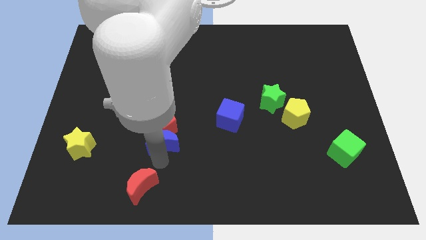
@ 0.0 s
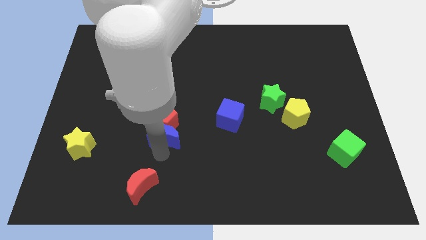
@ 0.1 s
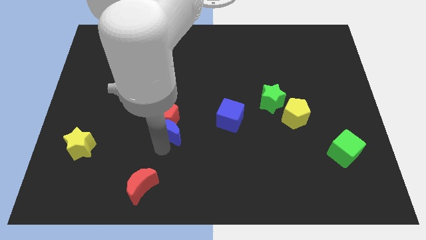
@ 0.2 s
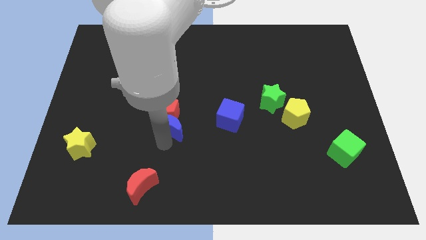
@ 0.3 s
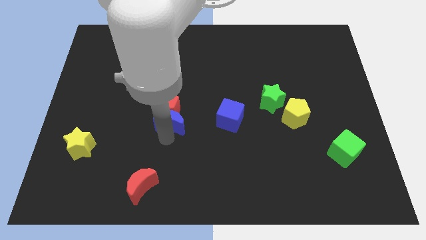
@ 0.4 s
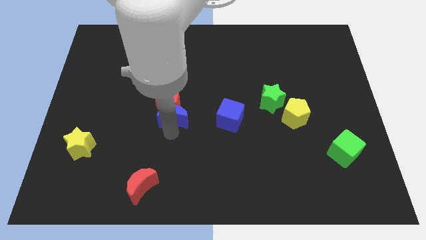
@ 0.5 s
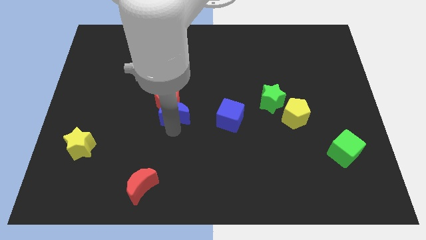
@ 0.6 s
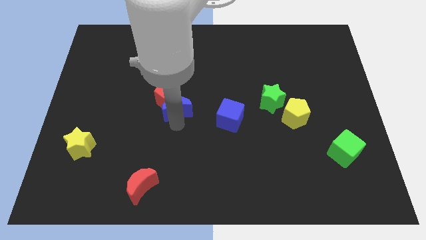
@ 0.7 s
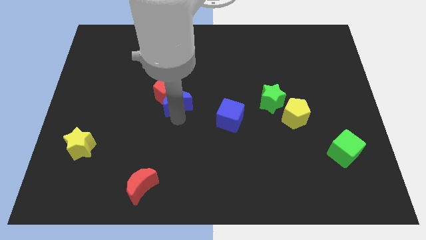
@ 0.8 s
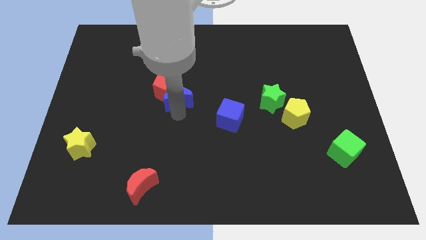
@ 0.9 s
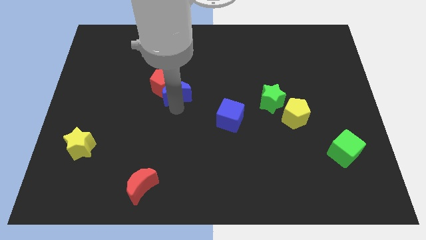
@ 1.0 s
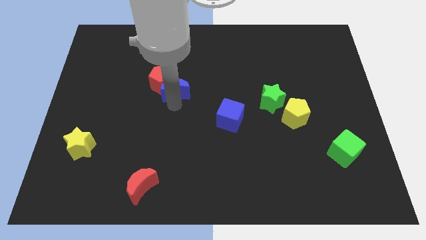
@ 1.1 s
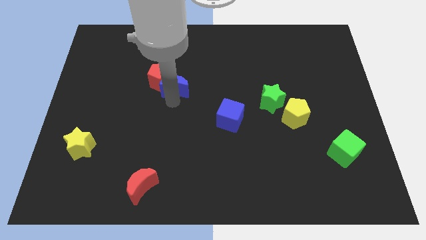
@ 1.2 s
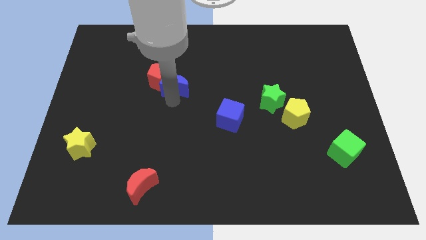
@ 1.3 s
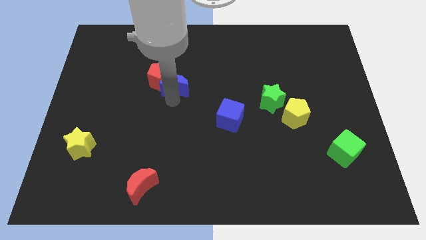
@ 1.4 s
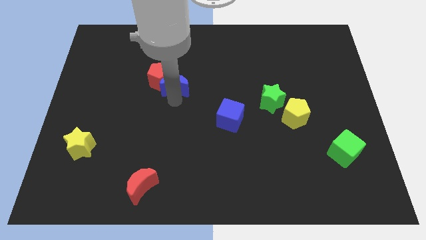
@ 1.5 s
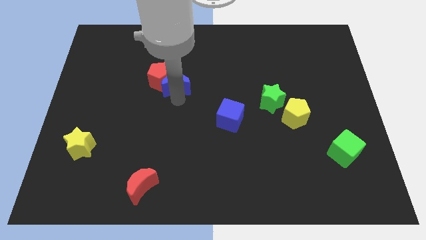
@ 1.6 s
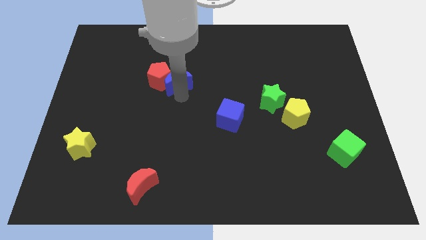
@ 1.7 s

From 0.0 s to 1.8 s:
push the red pentagon and blue moon slightly up

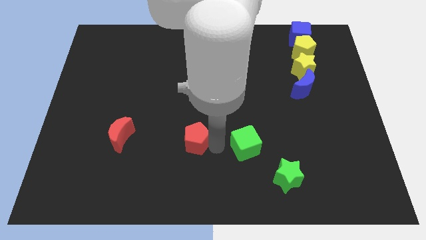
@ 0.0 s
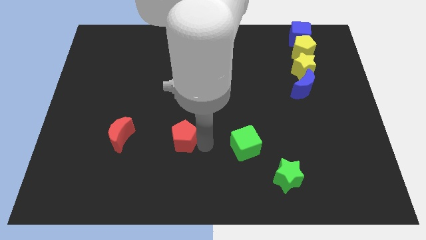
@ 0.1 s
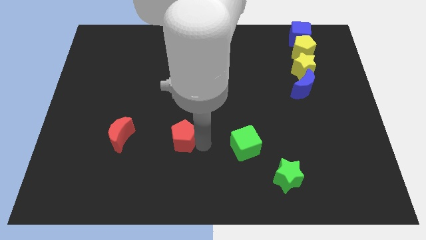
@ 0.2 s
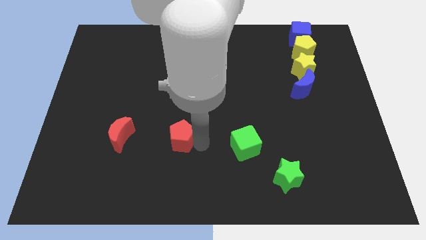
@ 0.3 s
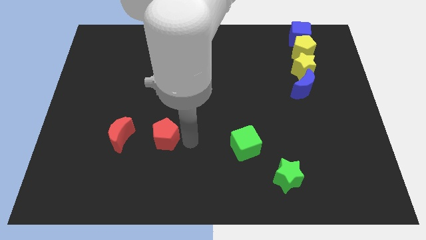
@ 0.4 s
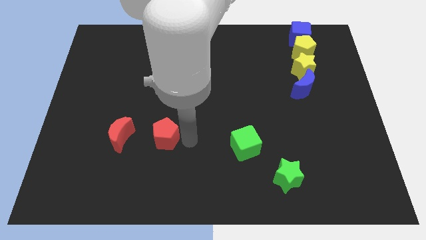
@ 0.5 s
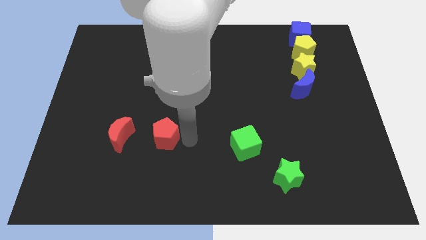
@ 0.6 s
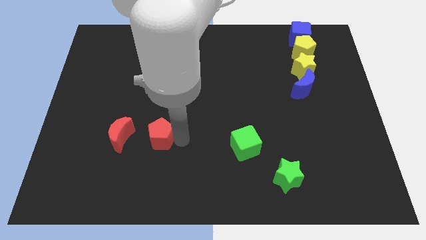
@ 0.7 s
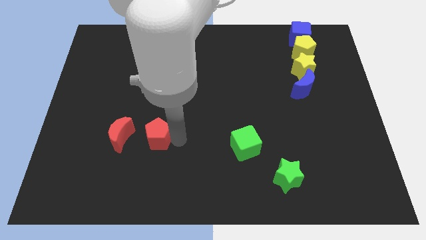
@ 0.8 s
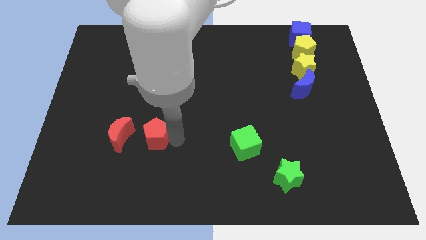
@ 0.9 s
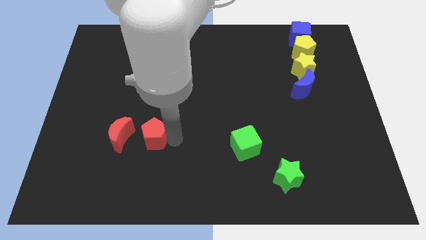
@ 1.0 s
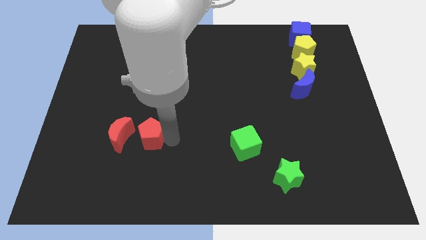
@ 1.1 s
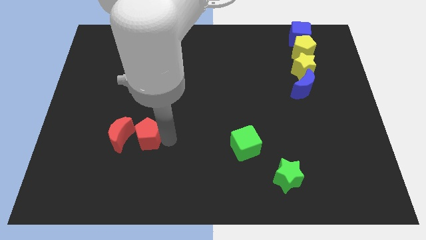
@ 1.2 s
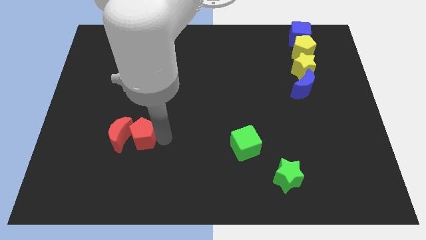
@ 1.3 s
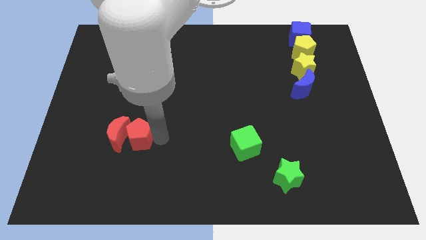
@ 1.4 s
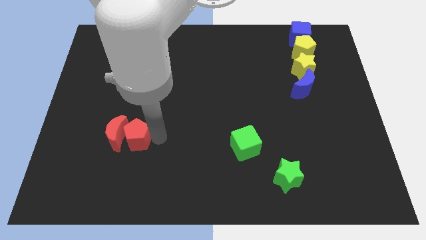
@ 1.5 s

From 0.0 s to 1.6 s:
push the red pentagon into the red crescent

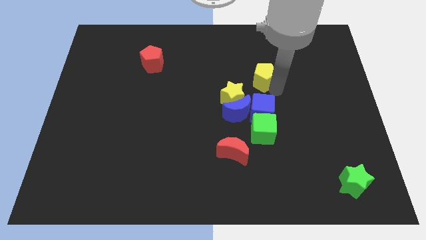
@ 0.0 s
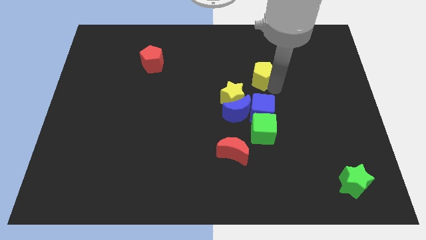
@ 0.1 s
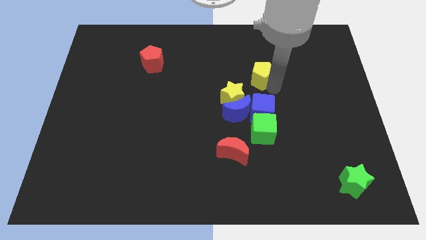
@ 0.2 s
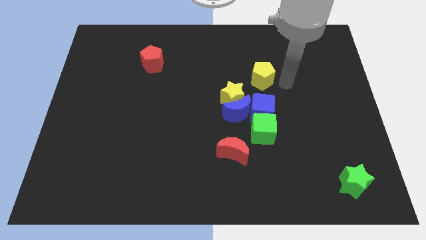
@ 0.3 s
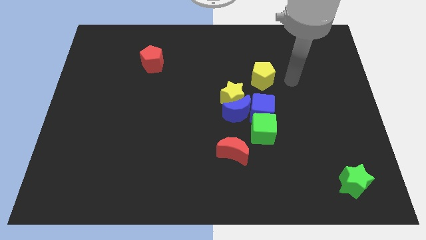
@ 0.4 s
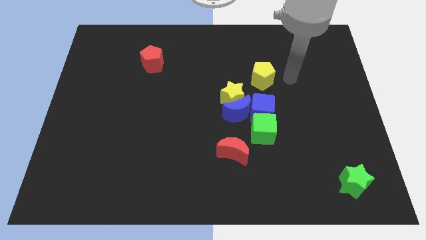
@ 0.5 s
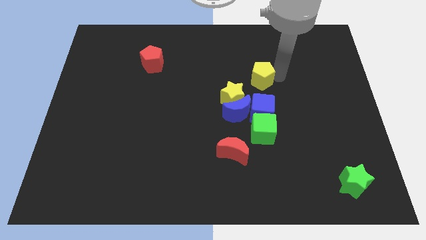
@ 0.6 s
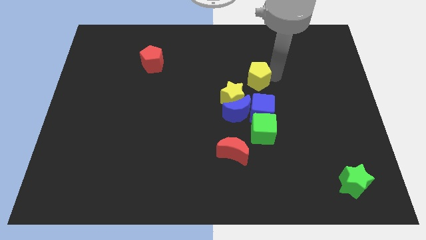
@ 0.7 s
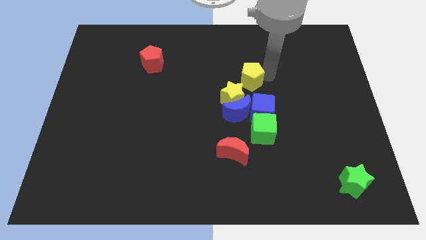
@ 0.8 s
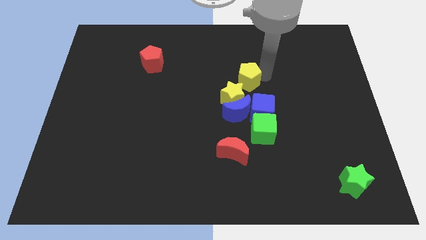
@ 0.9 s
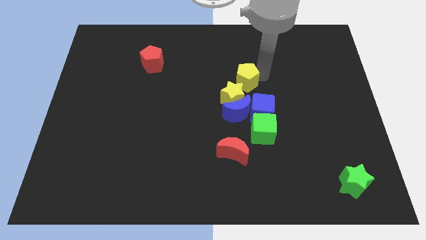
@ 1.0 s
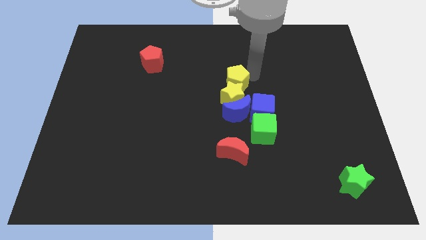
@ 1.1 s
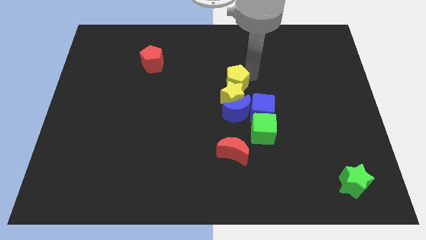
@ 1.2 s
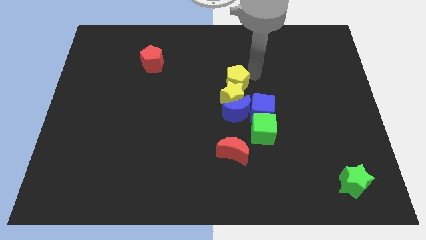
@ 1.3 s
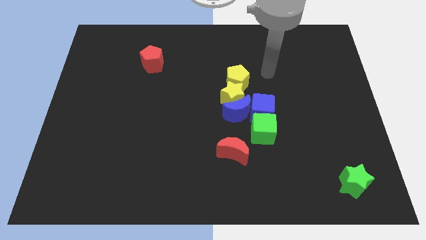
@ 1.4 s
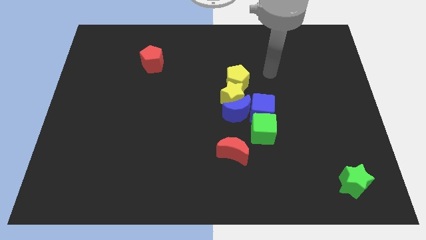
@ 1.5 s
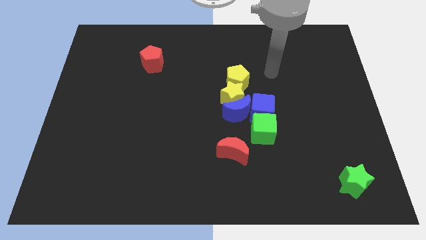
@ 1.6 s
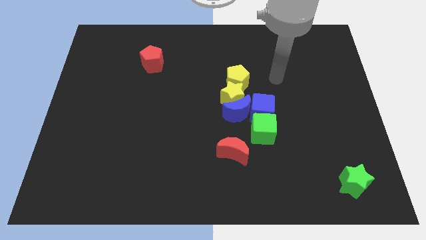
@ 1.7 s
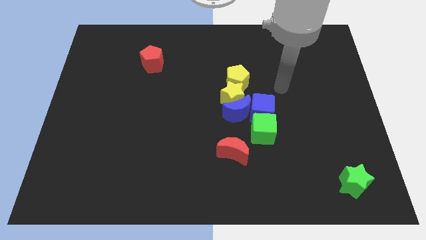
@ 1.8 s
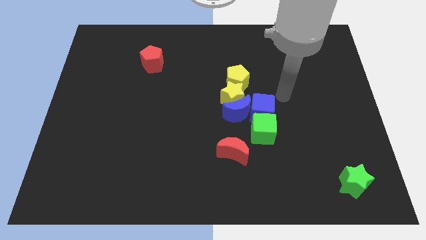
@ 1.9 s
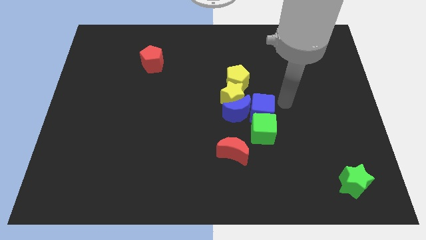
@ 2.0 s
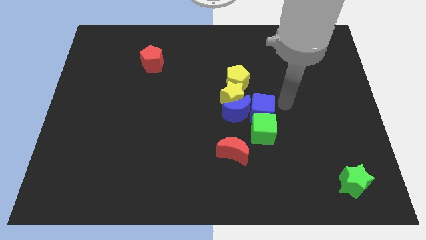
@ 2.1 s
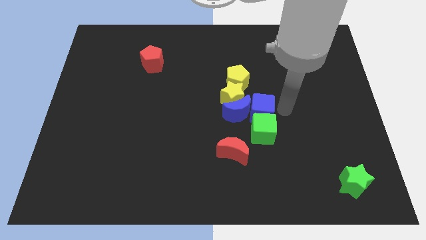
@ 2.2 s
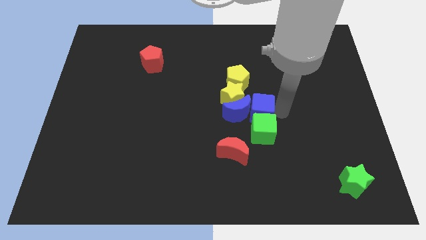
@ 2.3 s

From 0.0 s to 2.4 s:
push the yellow pentagon into the yellow star at the top and move away

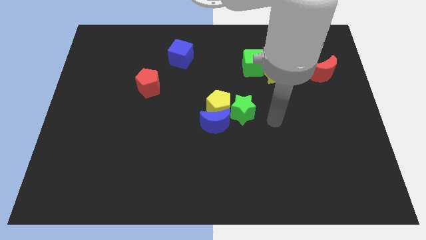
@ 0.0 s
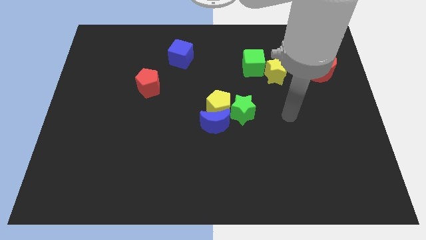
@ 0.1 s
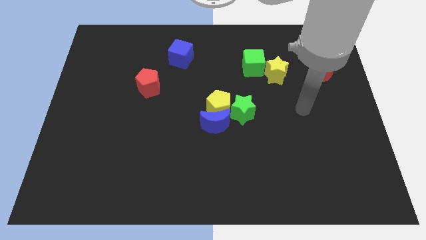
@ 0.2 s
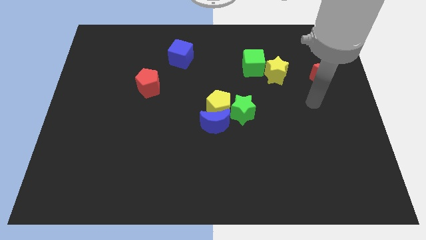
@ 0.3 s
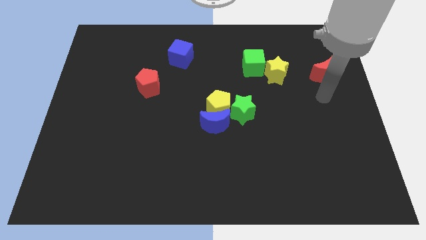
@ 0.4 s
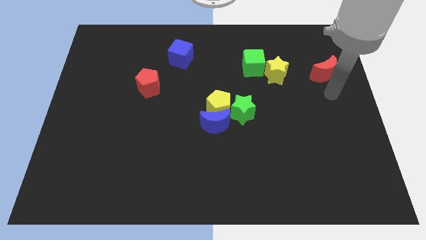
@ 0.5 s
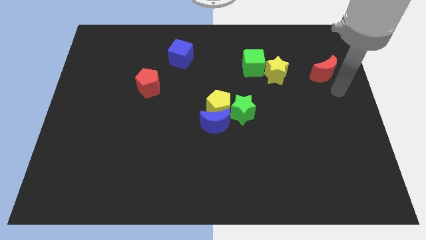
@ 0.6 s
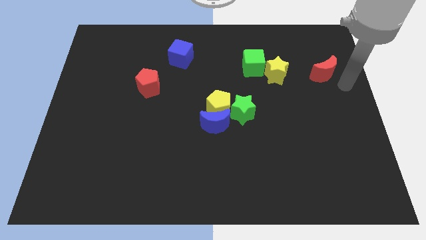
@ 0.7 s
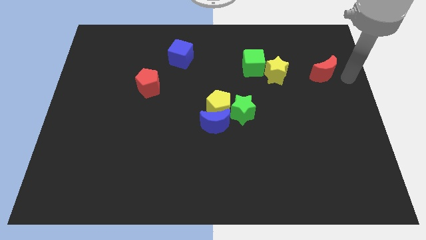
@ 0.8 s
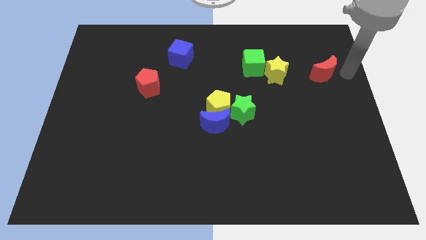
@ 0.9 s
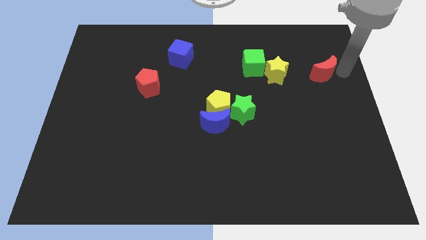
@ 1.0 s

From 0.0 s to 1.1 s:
push your arm at the top right side of the red moon

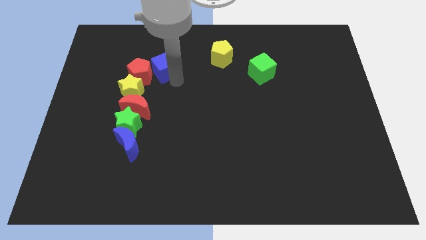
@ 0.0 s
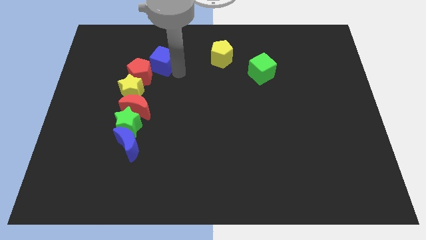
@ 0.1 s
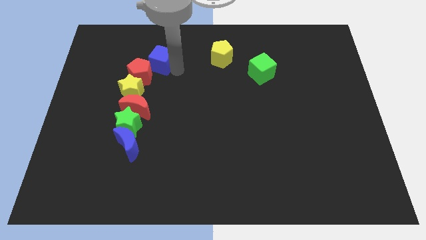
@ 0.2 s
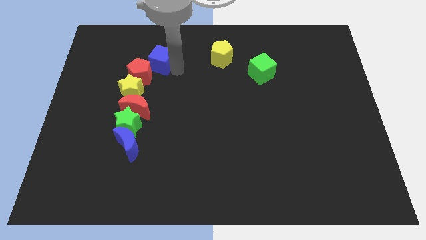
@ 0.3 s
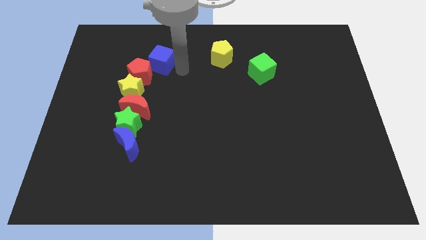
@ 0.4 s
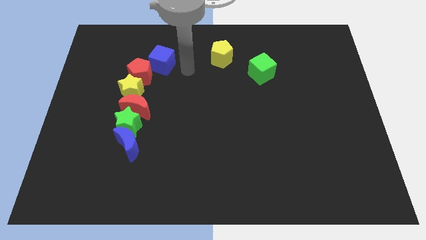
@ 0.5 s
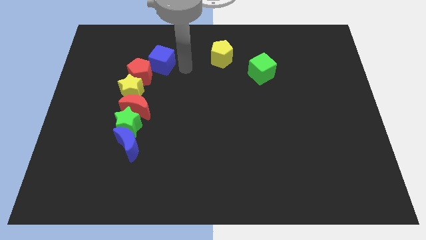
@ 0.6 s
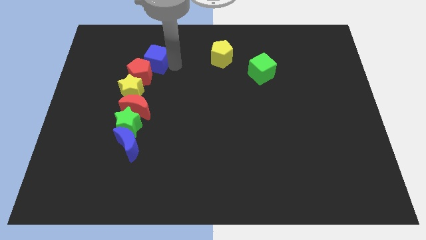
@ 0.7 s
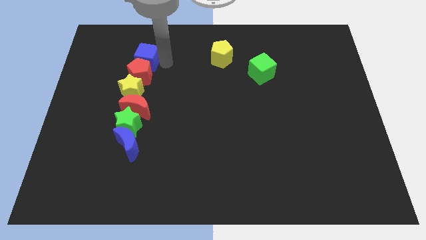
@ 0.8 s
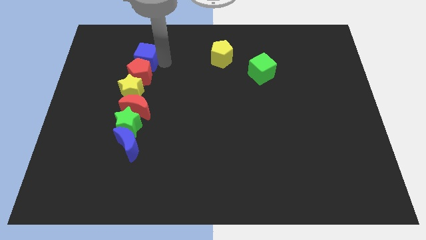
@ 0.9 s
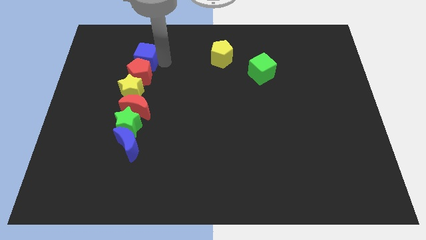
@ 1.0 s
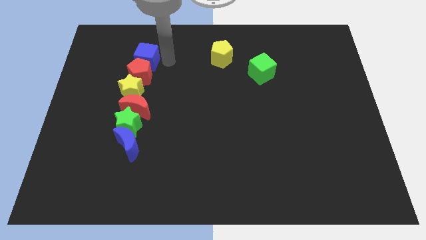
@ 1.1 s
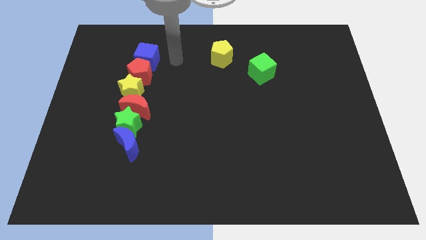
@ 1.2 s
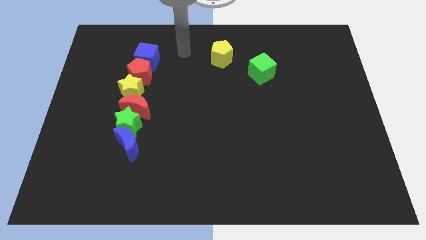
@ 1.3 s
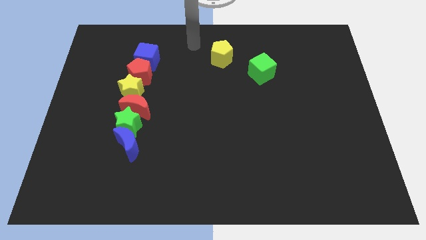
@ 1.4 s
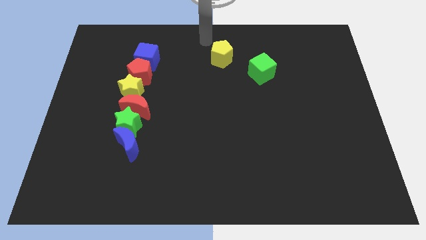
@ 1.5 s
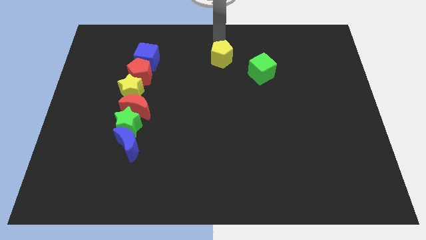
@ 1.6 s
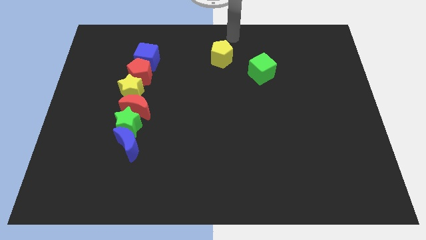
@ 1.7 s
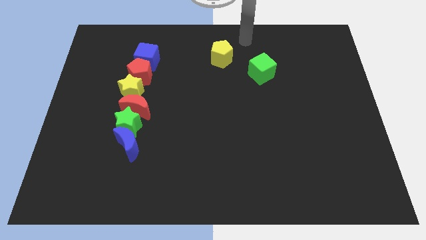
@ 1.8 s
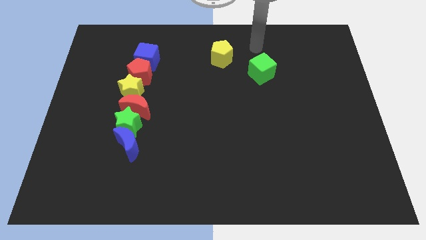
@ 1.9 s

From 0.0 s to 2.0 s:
place the blue cube above the red pentagon
